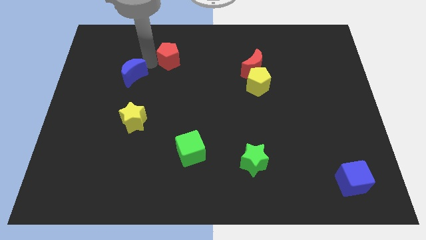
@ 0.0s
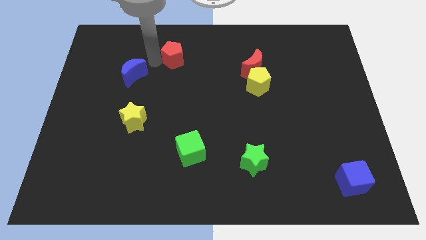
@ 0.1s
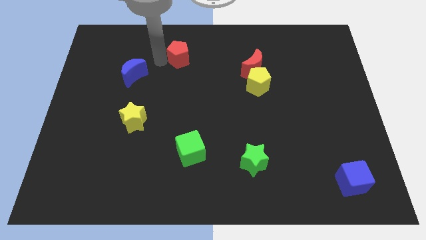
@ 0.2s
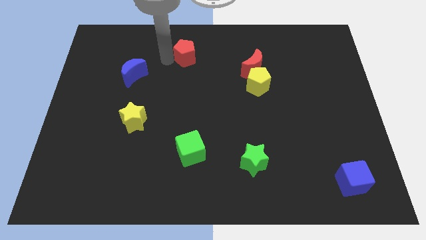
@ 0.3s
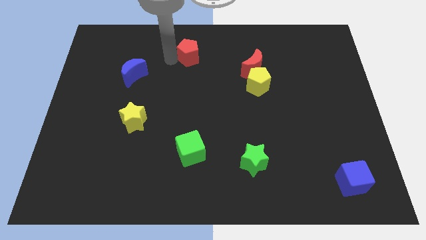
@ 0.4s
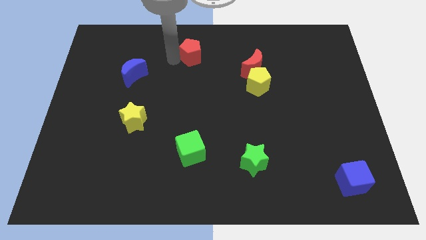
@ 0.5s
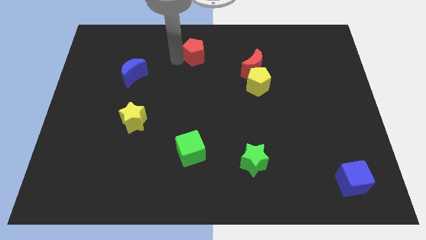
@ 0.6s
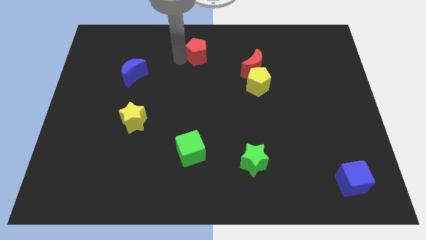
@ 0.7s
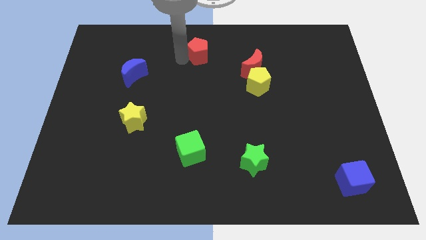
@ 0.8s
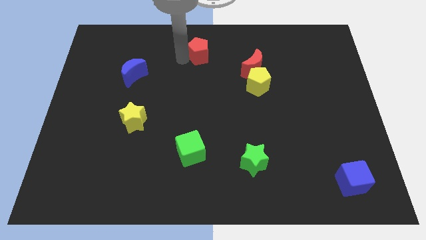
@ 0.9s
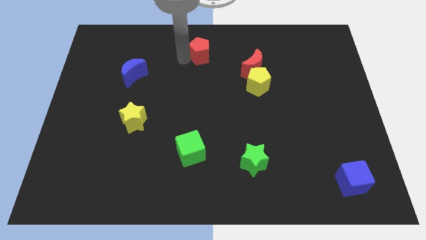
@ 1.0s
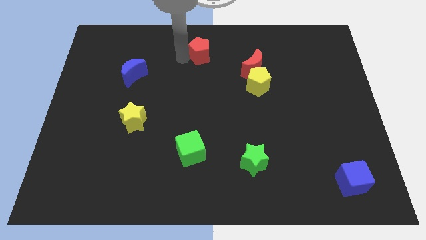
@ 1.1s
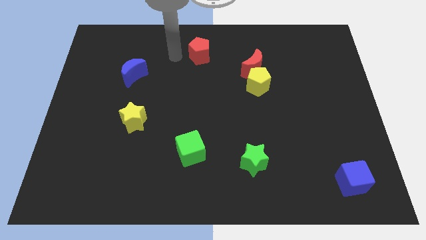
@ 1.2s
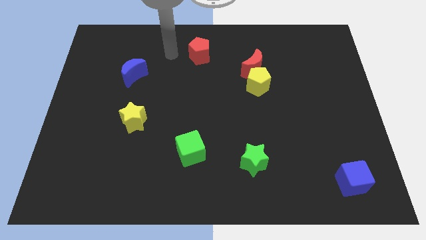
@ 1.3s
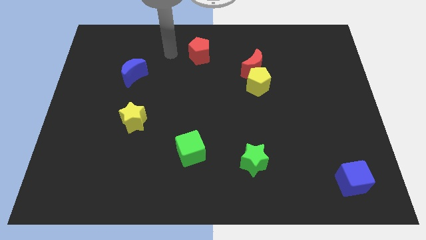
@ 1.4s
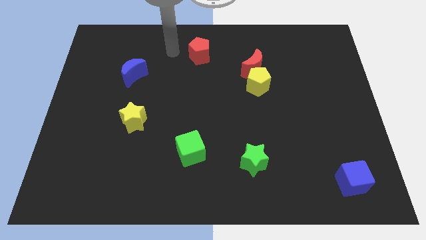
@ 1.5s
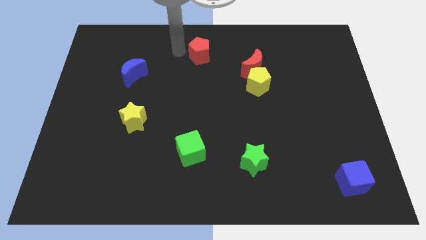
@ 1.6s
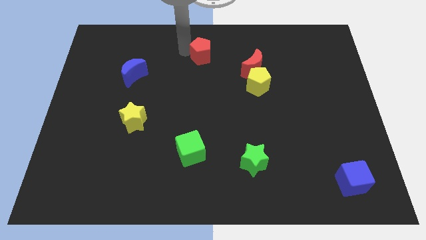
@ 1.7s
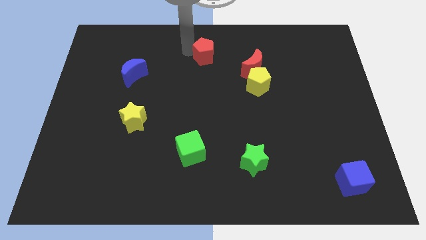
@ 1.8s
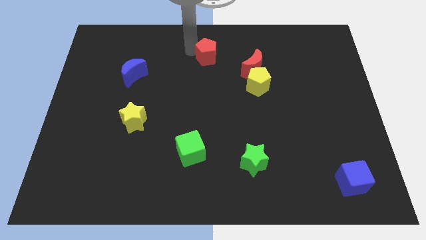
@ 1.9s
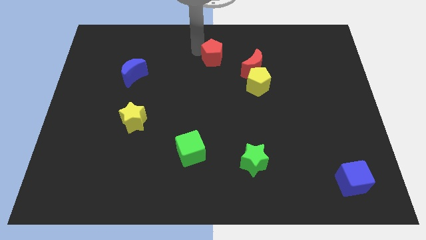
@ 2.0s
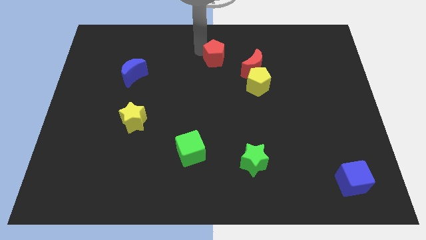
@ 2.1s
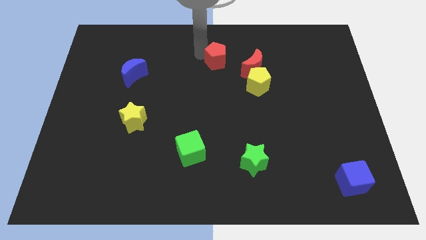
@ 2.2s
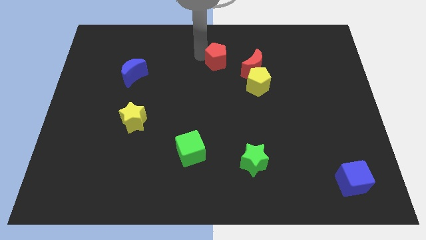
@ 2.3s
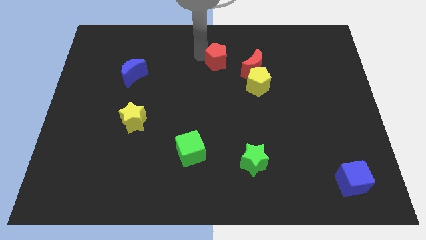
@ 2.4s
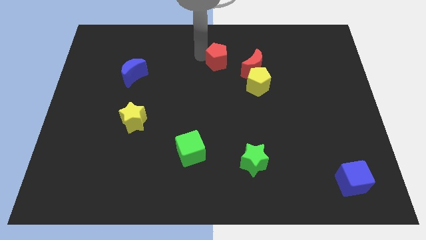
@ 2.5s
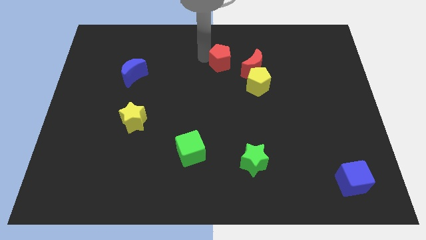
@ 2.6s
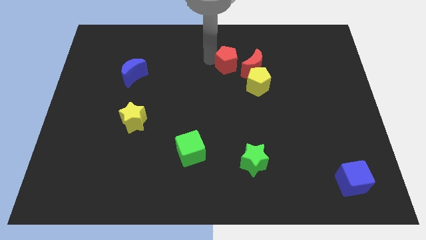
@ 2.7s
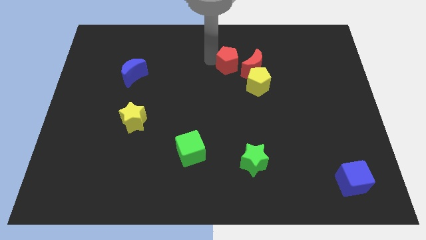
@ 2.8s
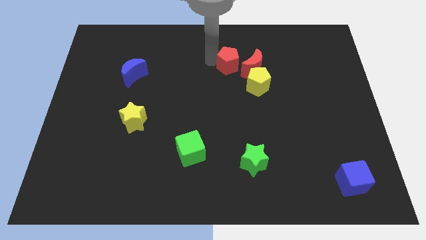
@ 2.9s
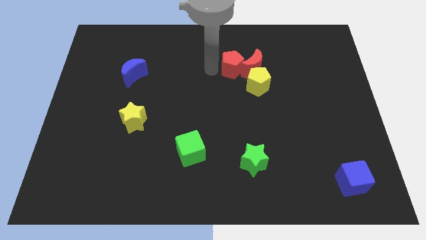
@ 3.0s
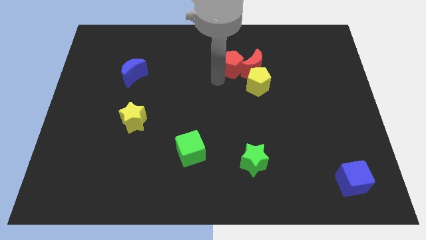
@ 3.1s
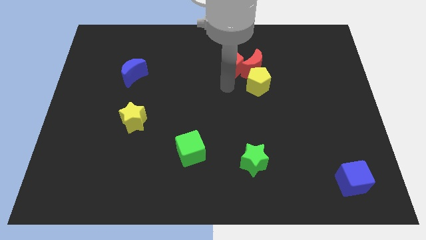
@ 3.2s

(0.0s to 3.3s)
slide the red pentagon into the left side of the red moon

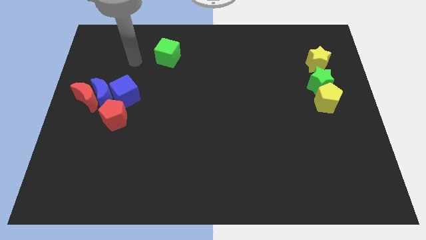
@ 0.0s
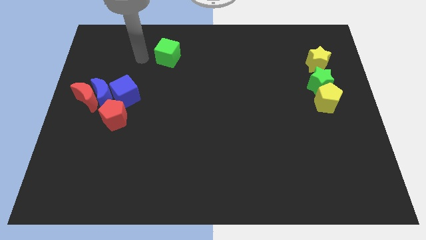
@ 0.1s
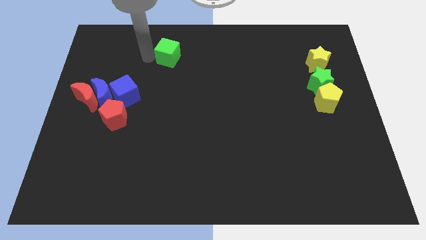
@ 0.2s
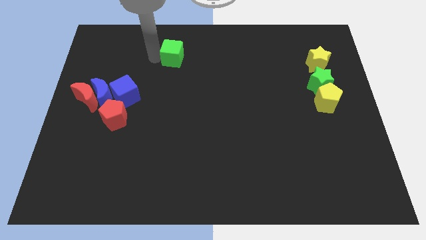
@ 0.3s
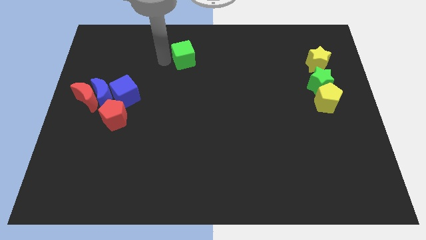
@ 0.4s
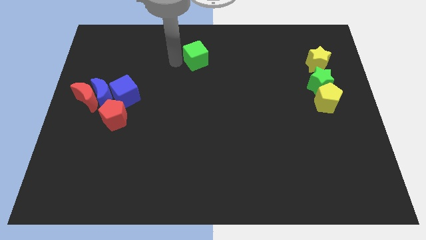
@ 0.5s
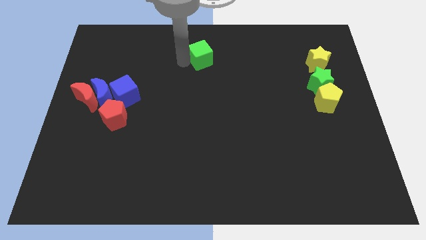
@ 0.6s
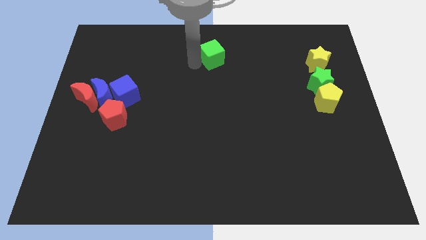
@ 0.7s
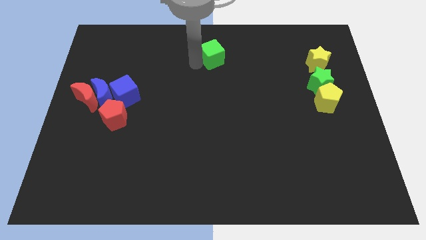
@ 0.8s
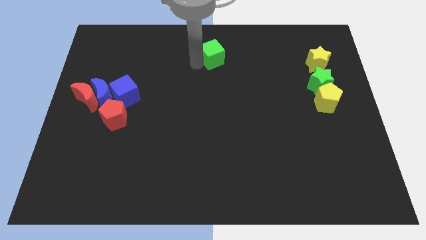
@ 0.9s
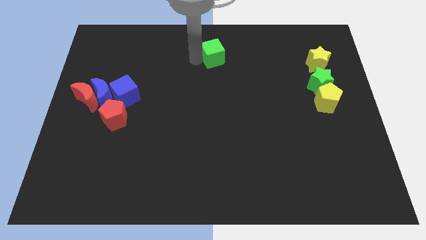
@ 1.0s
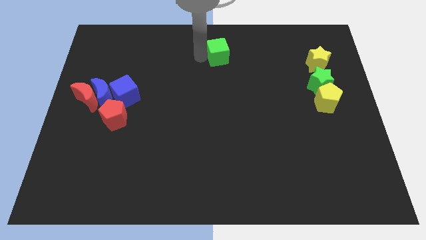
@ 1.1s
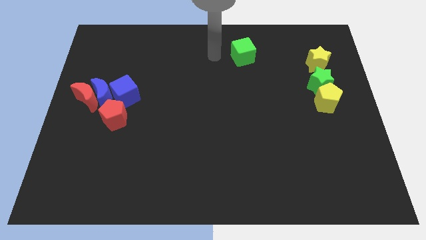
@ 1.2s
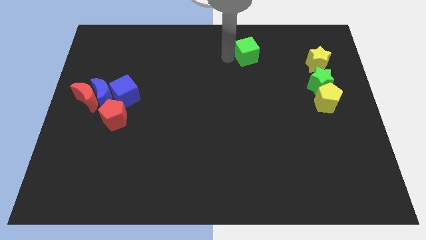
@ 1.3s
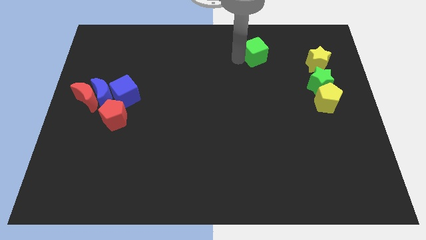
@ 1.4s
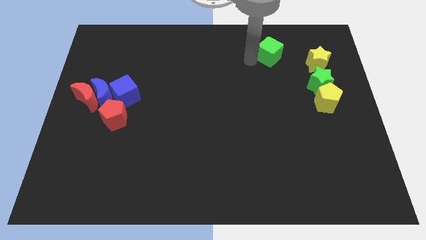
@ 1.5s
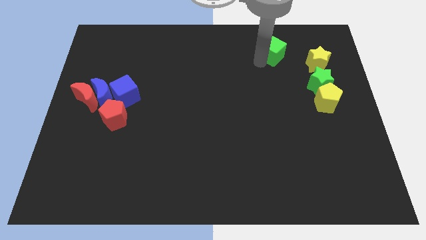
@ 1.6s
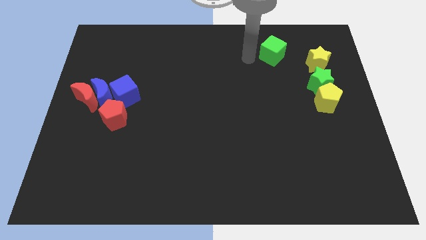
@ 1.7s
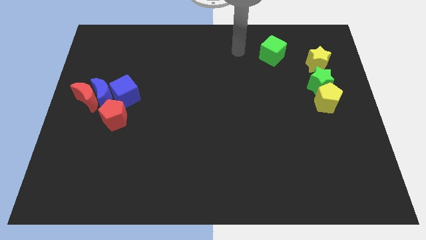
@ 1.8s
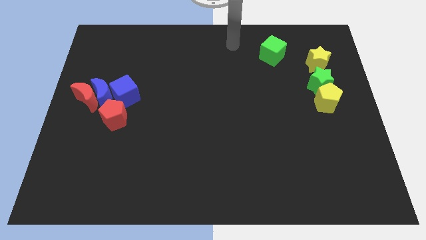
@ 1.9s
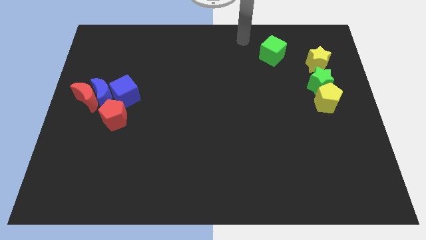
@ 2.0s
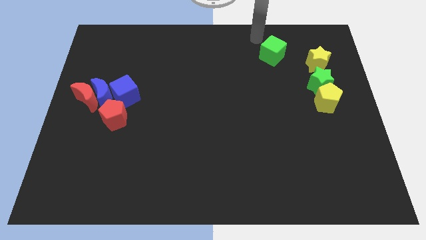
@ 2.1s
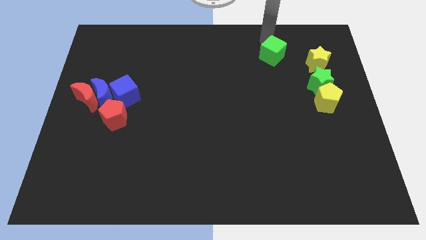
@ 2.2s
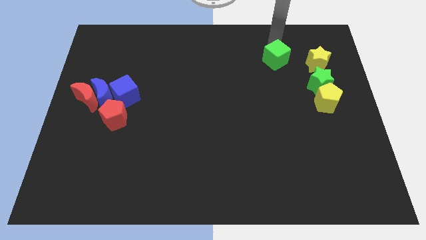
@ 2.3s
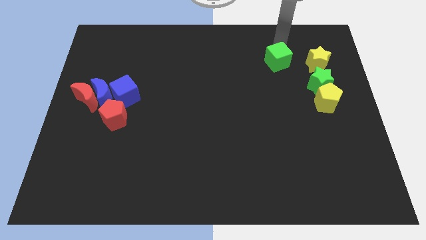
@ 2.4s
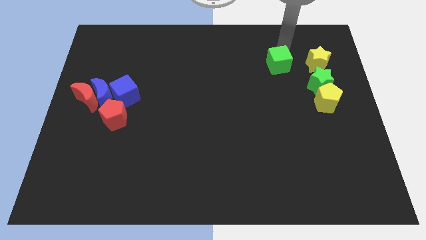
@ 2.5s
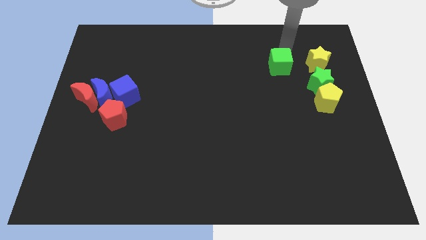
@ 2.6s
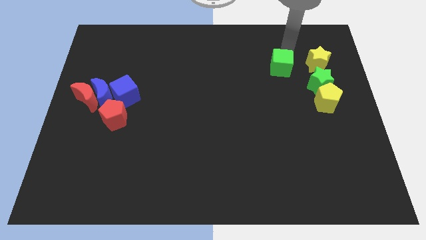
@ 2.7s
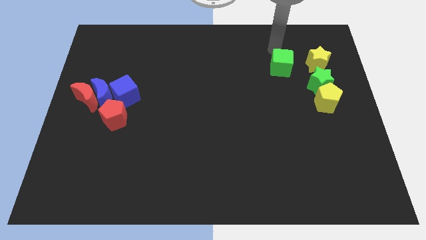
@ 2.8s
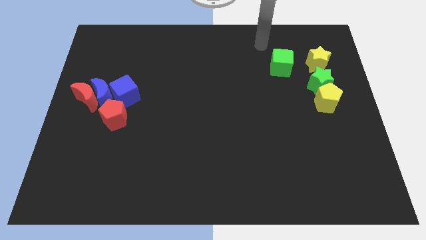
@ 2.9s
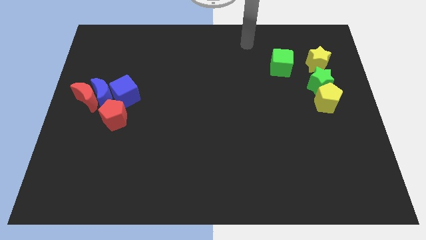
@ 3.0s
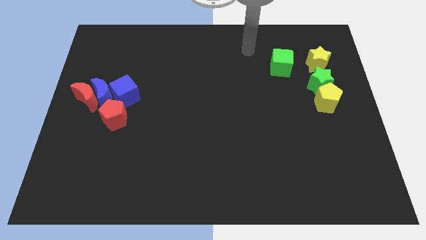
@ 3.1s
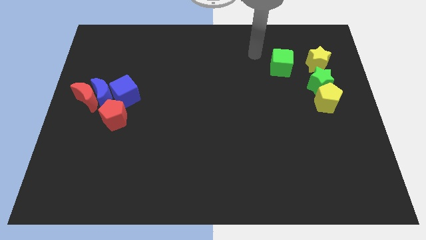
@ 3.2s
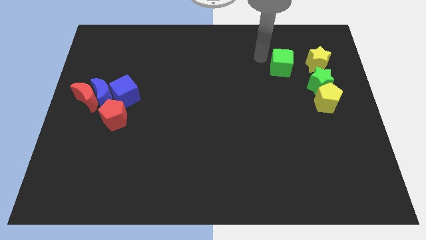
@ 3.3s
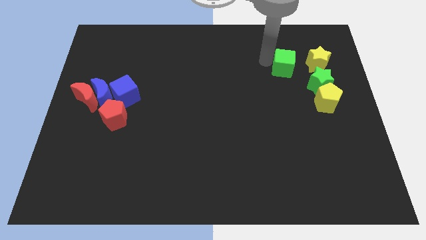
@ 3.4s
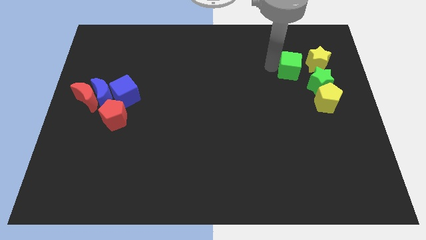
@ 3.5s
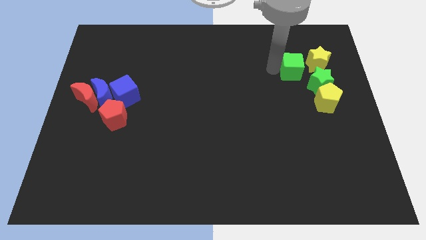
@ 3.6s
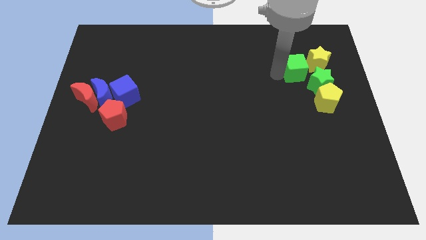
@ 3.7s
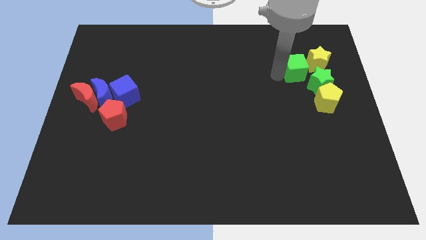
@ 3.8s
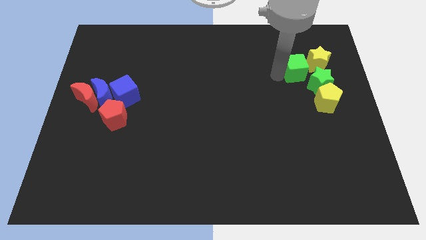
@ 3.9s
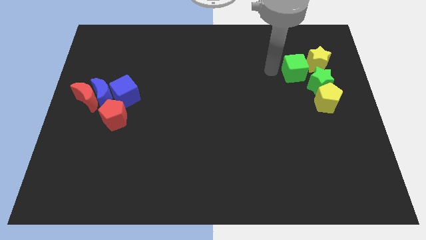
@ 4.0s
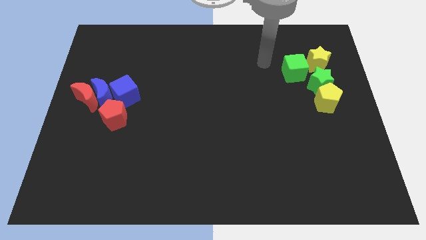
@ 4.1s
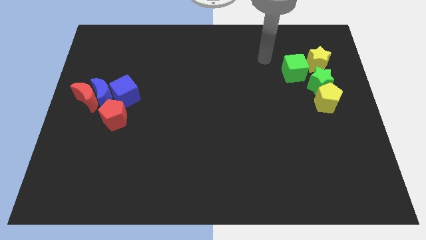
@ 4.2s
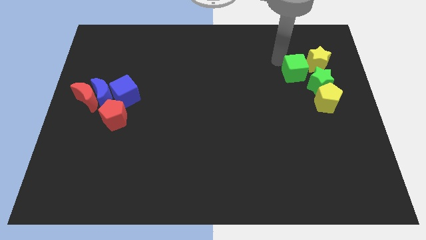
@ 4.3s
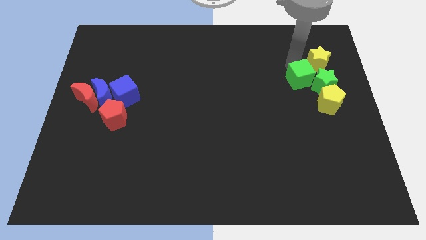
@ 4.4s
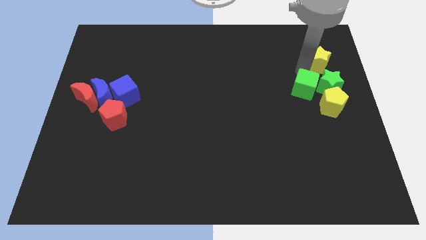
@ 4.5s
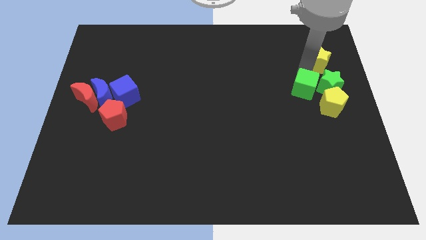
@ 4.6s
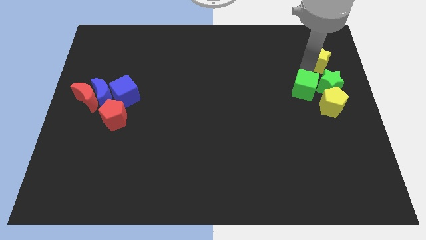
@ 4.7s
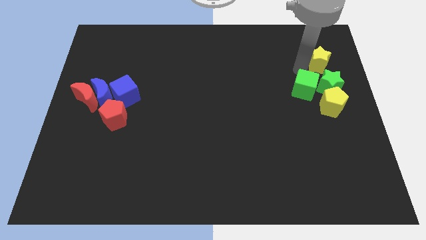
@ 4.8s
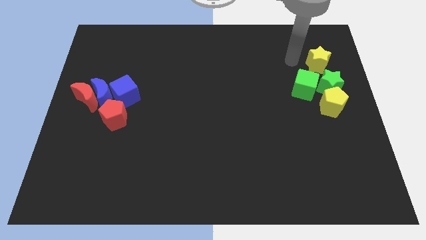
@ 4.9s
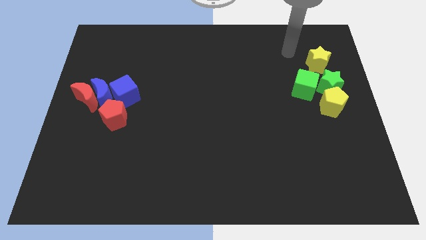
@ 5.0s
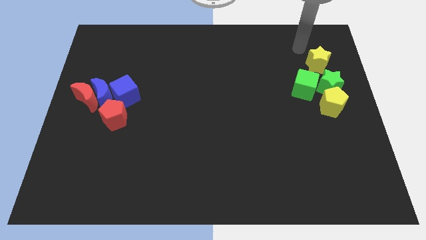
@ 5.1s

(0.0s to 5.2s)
push the green cube to the left of the green star

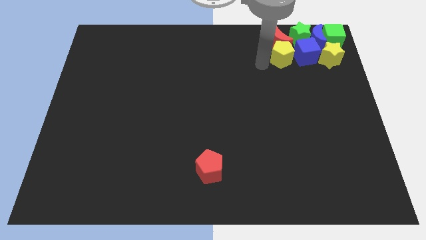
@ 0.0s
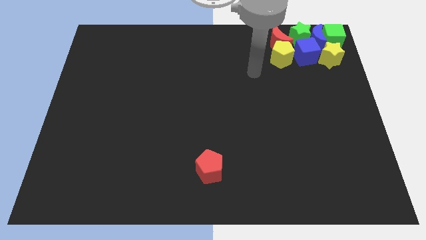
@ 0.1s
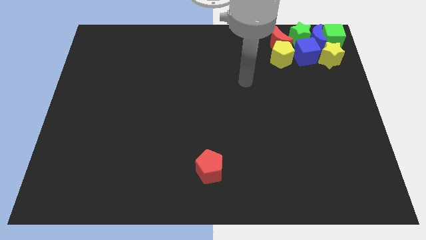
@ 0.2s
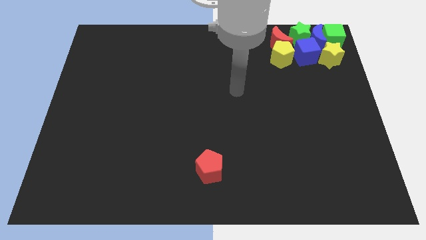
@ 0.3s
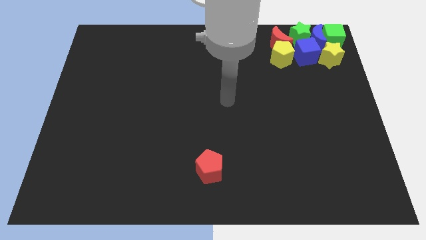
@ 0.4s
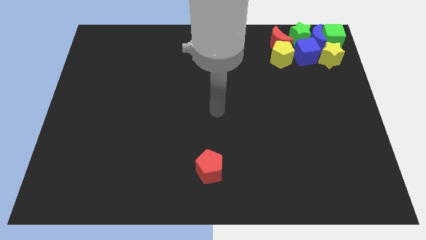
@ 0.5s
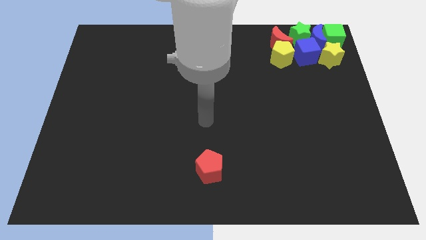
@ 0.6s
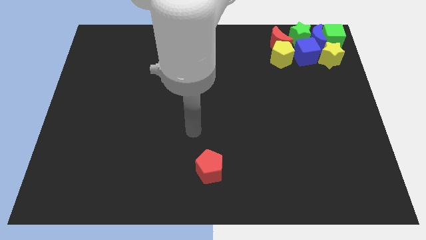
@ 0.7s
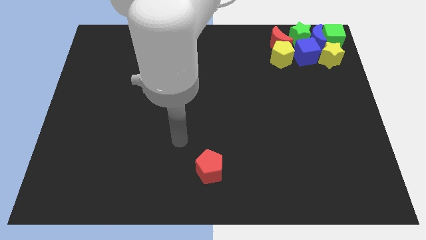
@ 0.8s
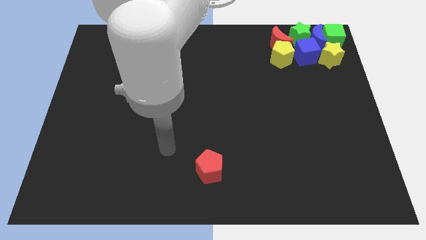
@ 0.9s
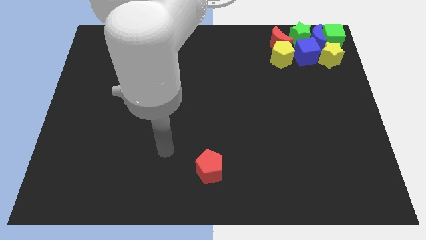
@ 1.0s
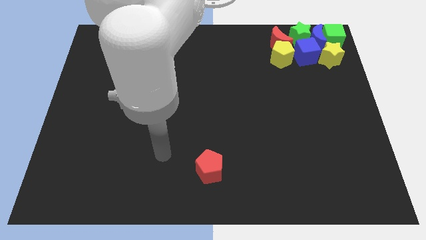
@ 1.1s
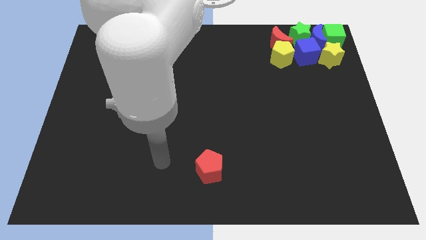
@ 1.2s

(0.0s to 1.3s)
move the arm away from the yellow pentagon
